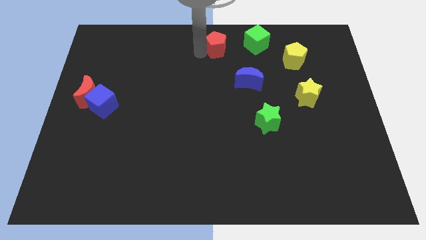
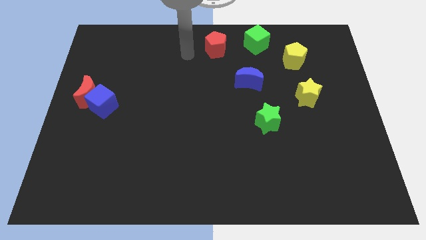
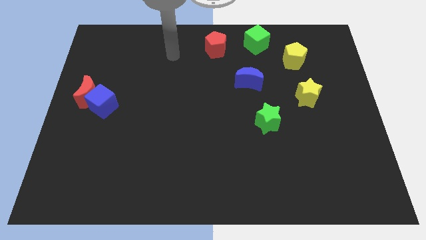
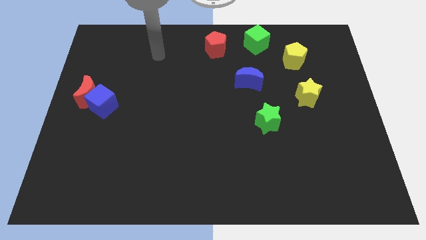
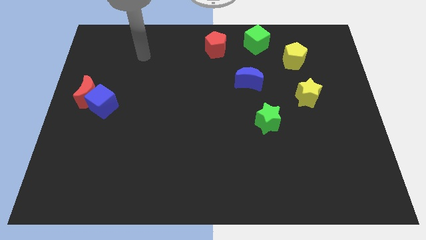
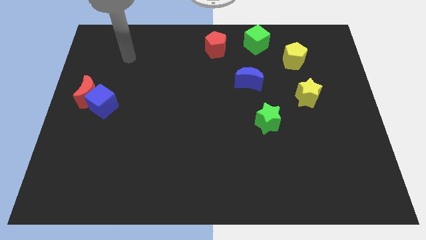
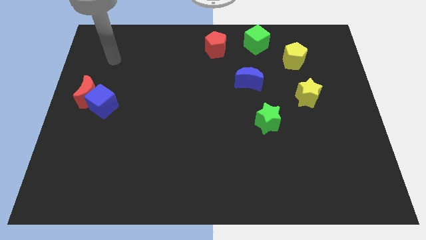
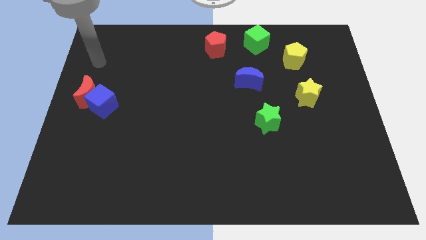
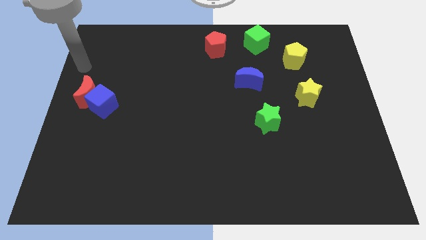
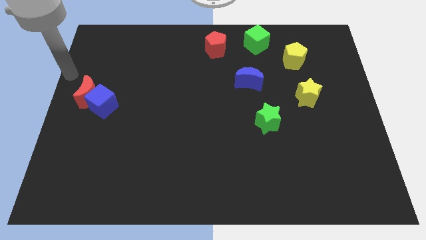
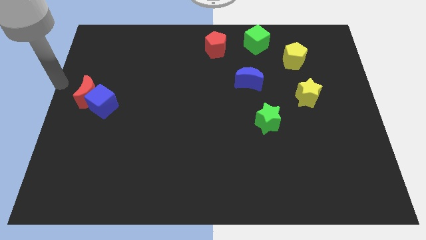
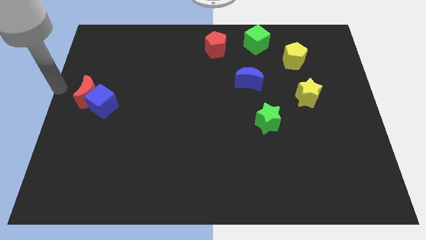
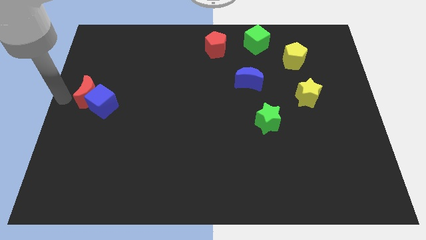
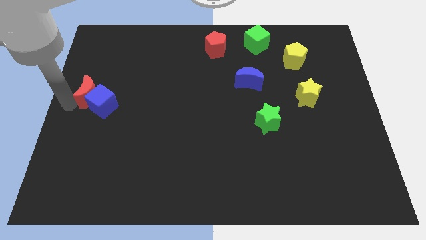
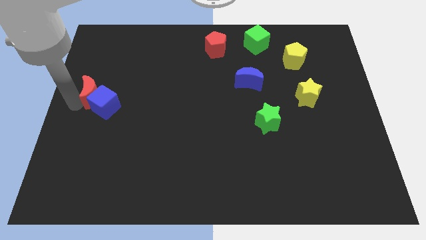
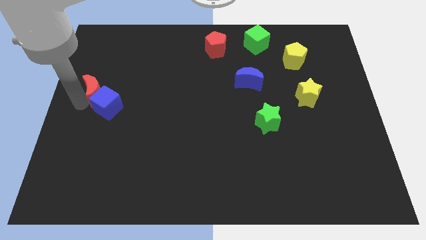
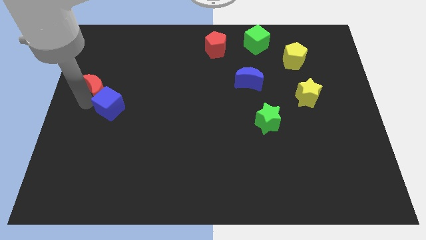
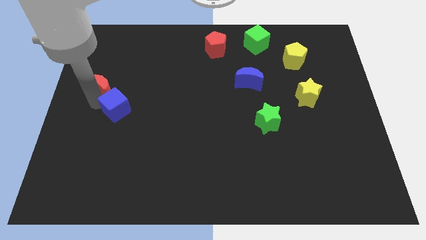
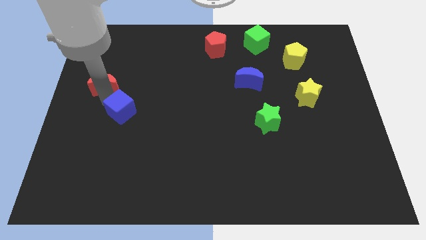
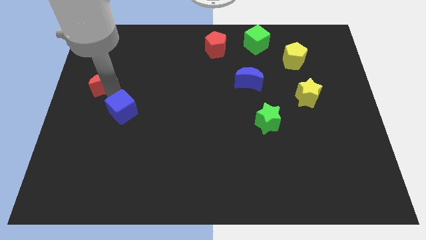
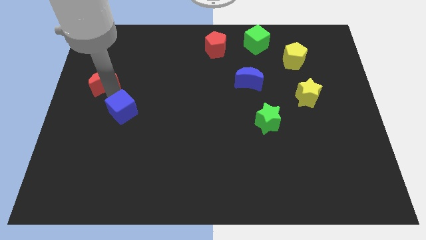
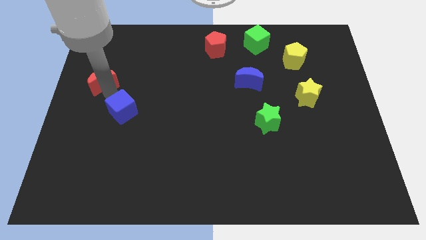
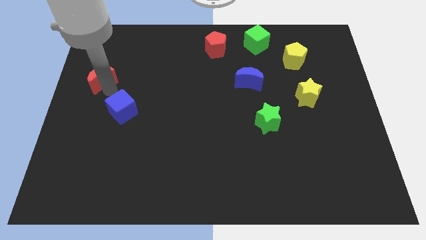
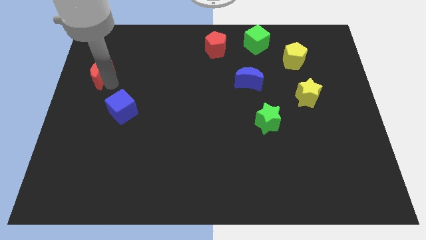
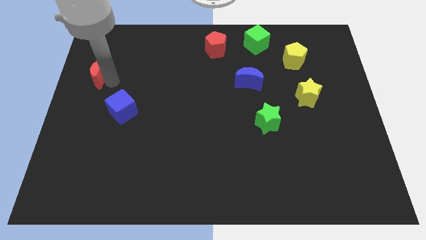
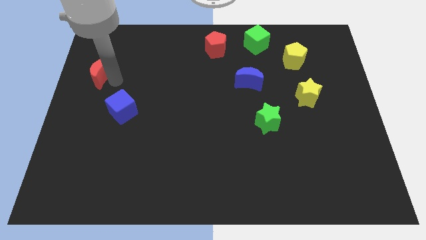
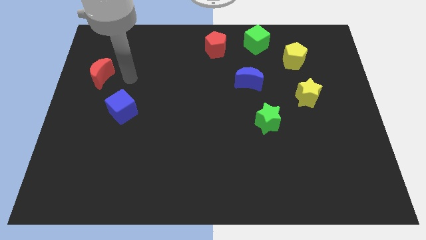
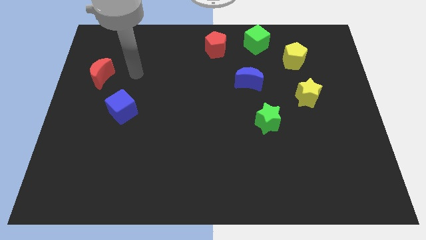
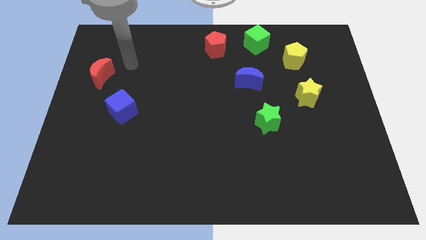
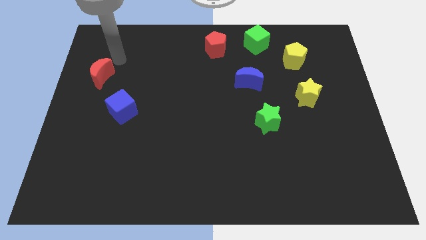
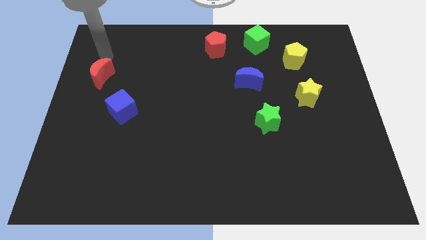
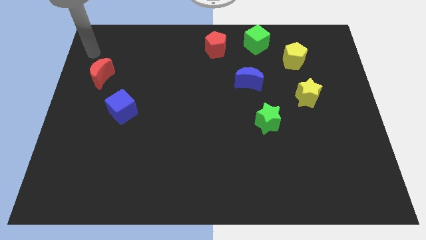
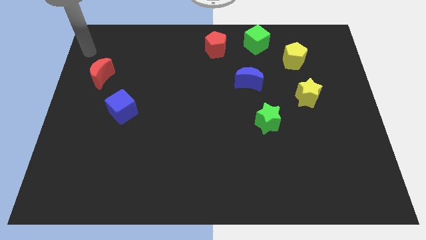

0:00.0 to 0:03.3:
separate the red moon from the blue cube

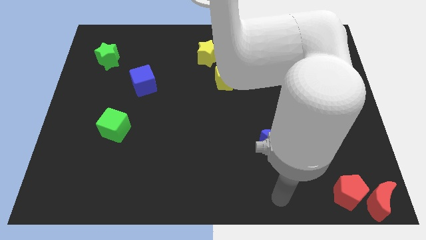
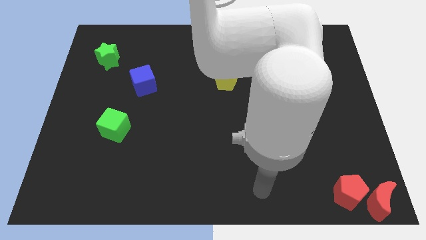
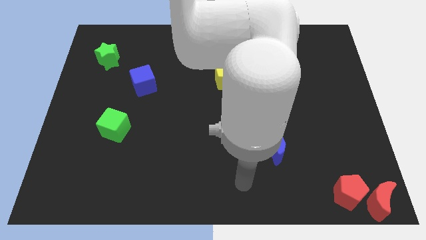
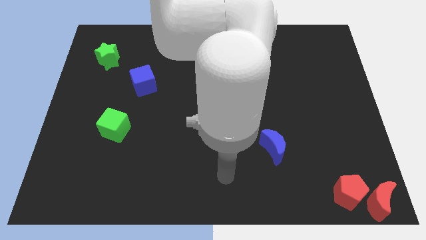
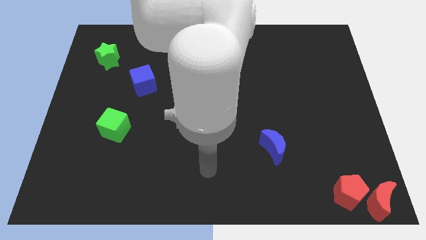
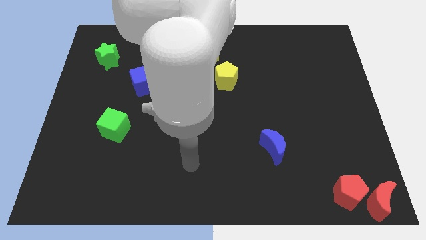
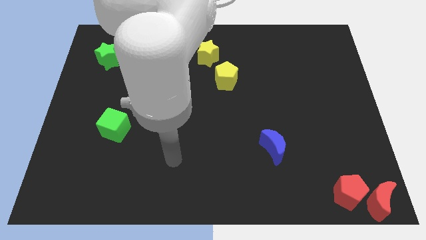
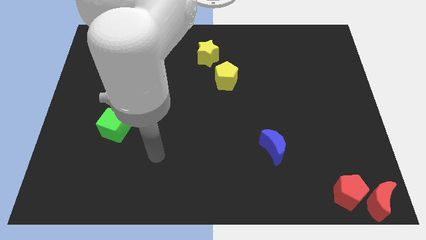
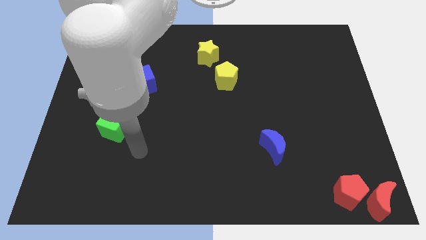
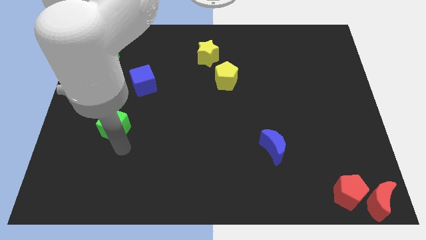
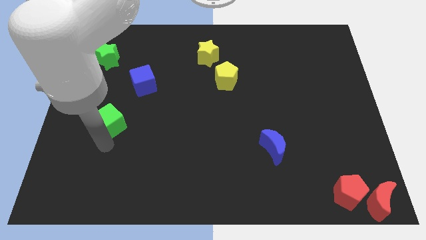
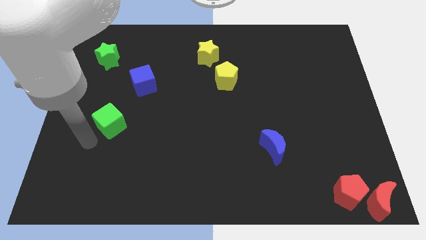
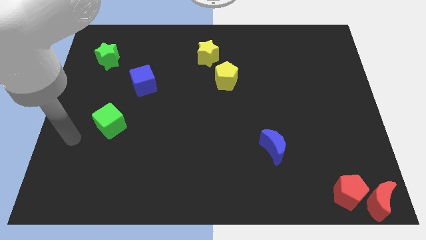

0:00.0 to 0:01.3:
move your arm towards left center of the board

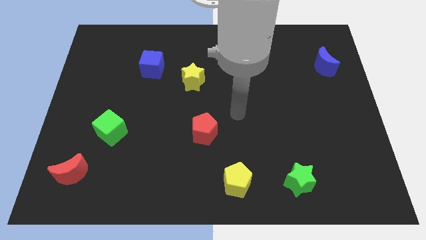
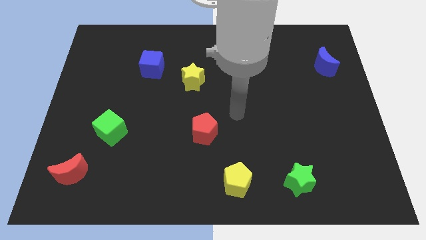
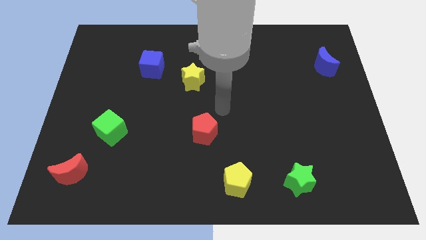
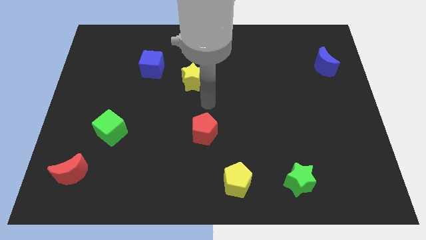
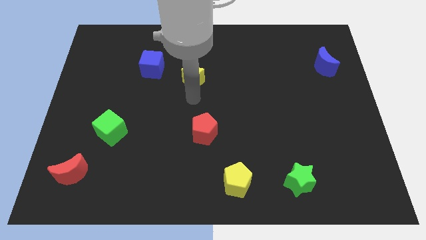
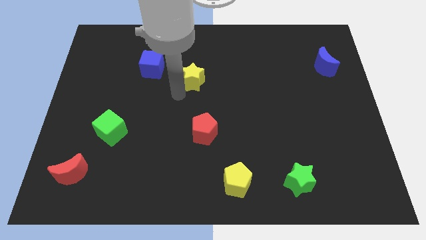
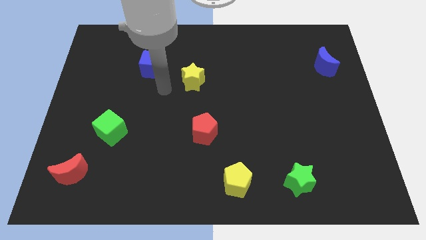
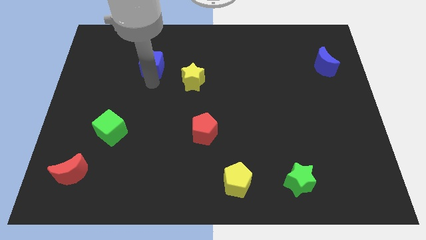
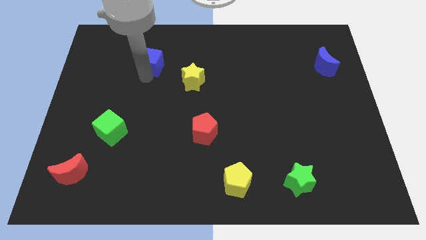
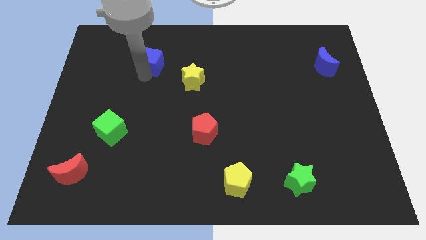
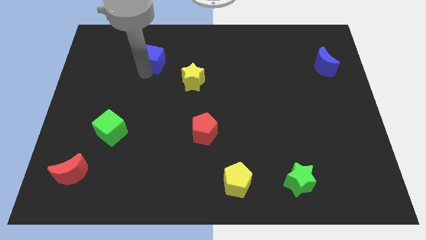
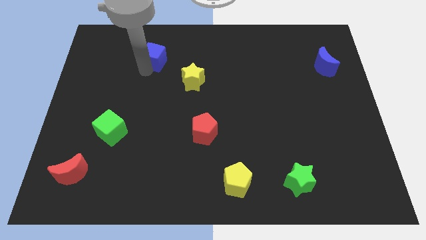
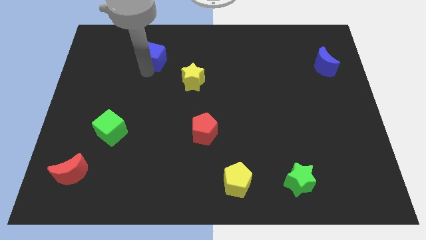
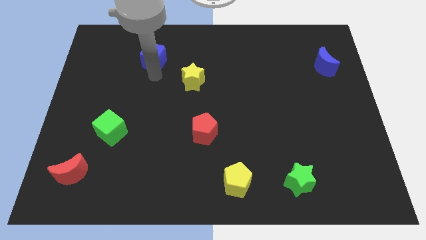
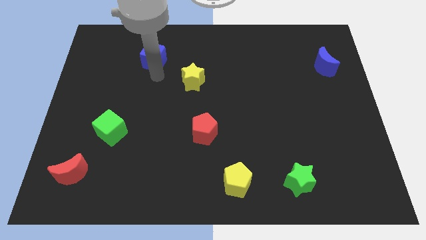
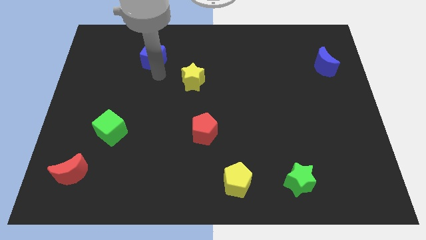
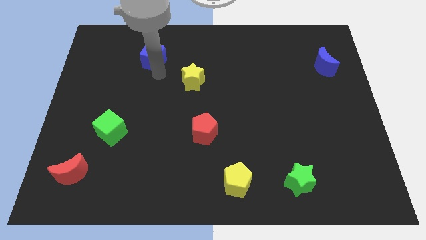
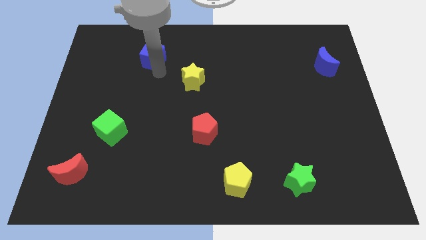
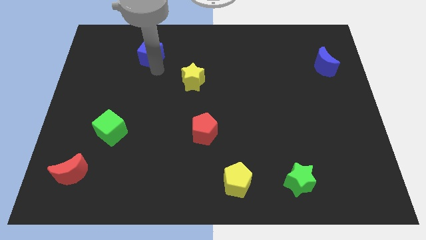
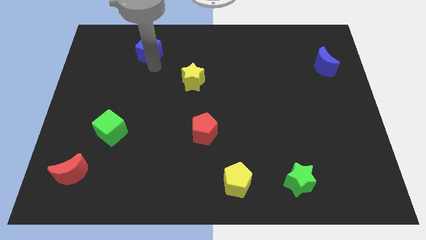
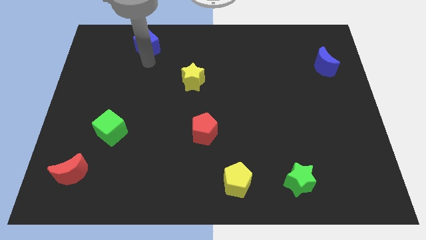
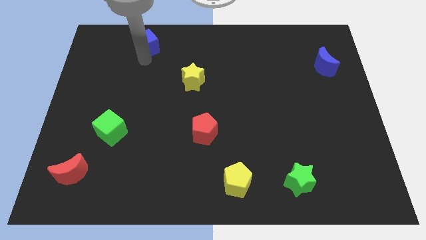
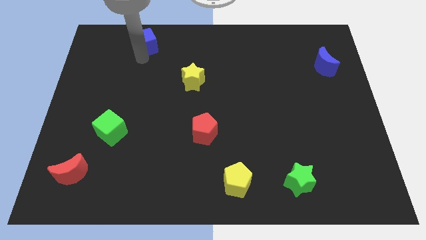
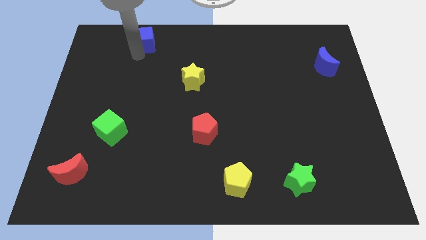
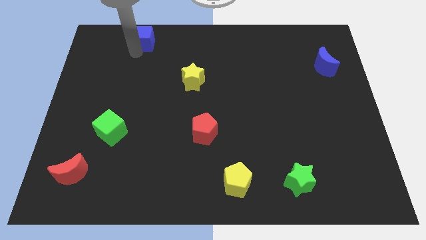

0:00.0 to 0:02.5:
push the blue cube slightly to the top

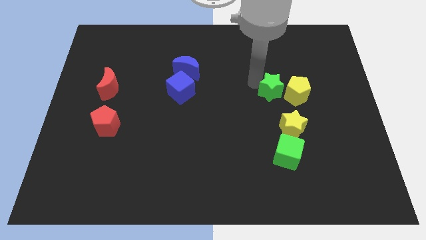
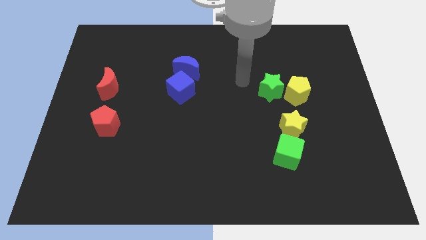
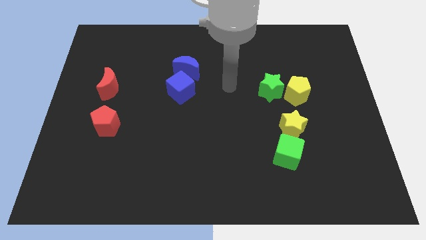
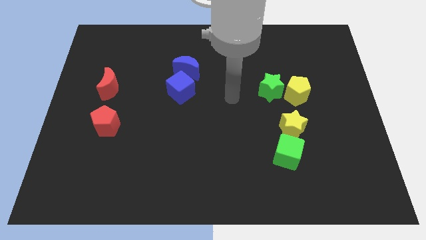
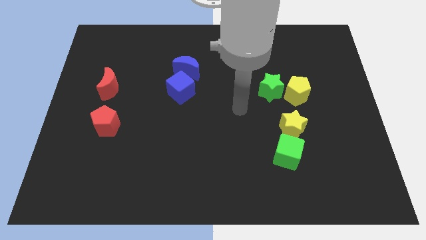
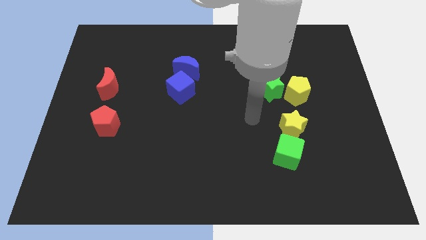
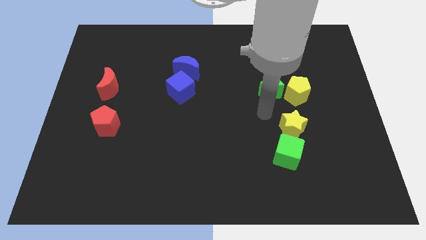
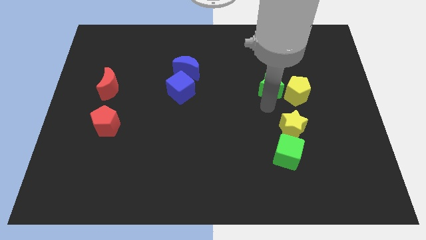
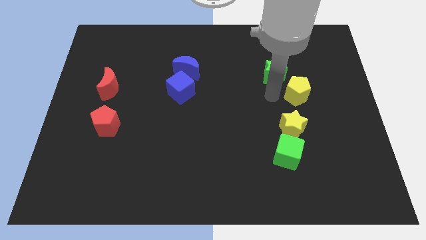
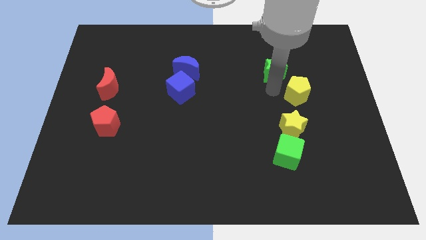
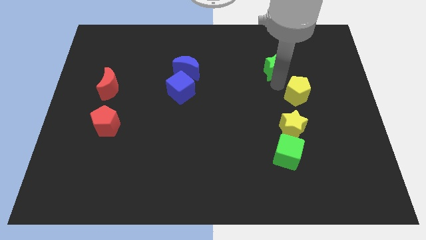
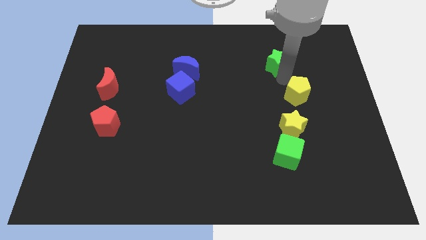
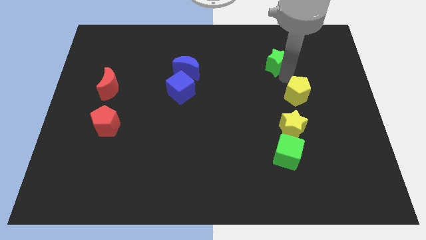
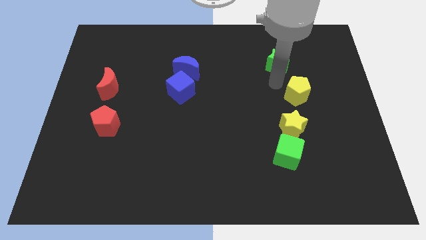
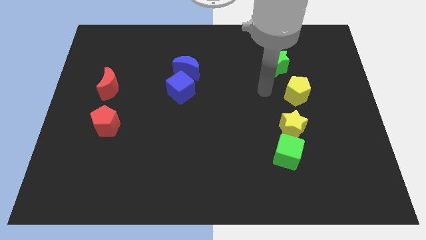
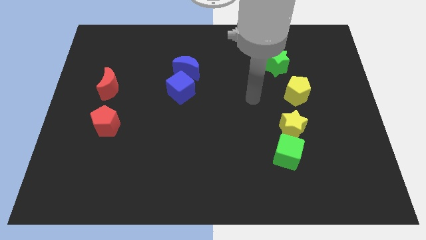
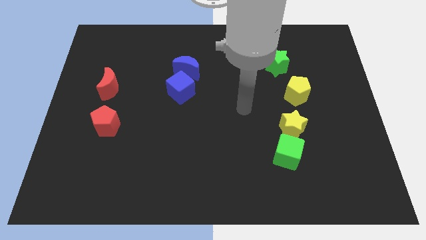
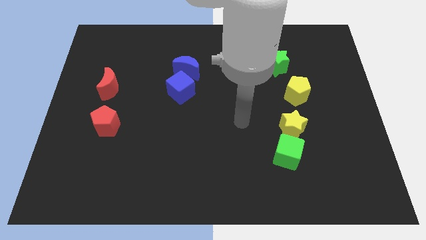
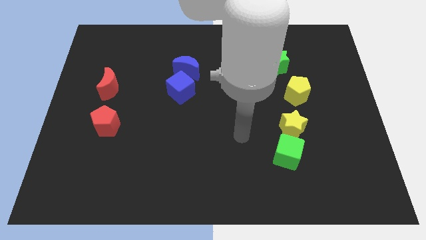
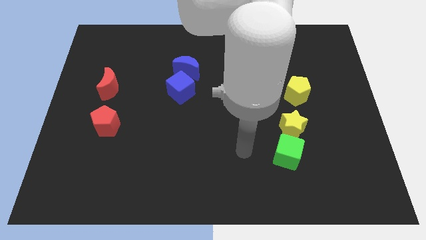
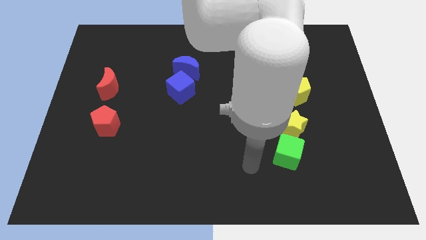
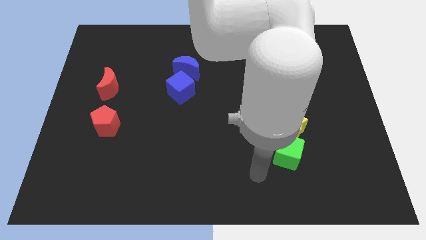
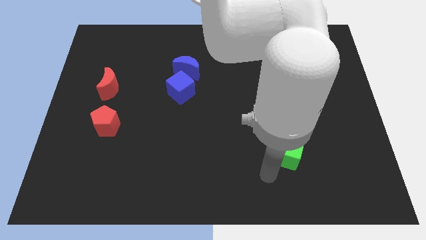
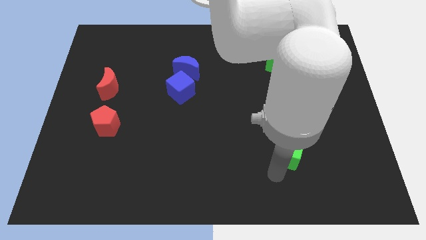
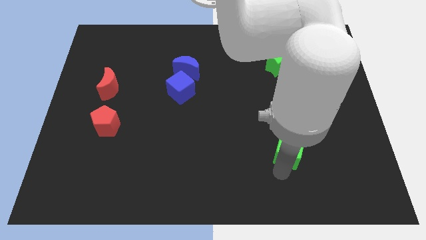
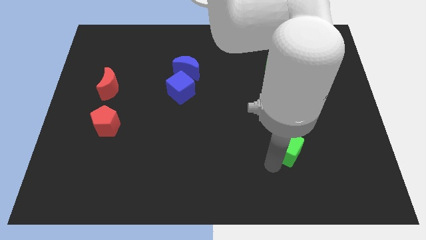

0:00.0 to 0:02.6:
move the green star upwards
